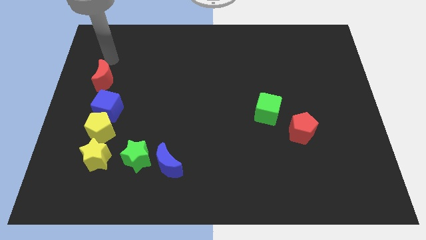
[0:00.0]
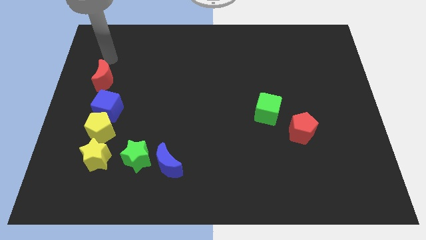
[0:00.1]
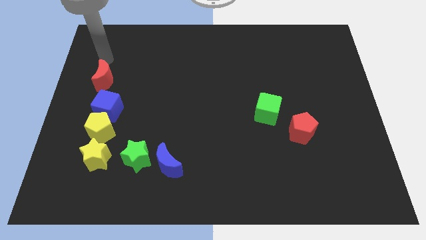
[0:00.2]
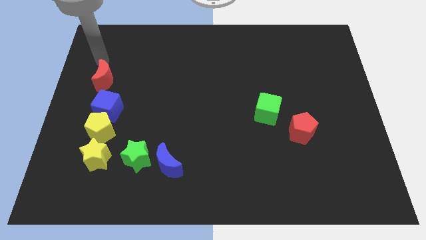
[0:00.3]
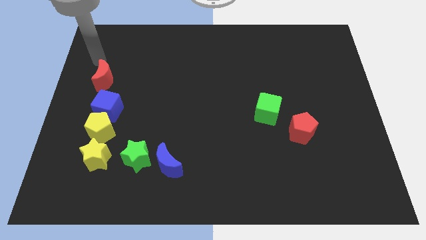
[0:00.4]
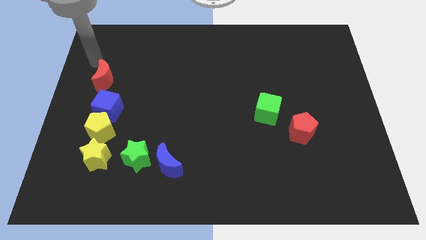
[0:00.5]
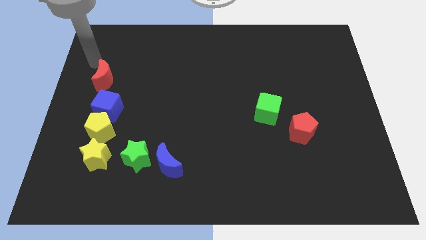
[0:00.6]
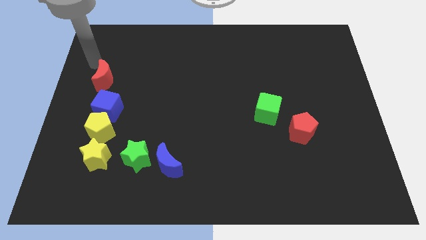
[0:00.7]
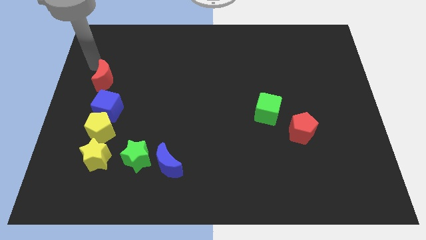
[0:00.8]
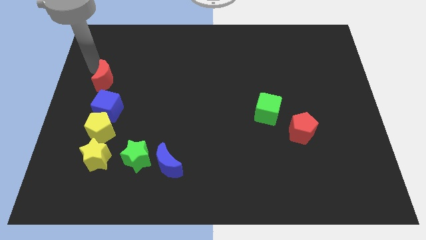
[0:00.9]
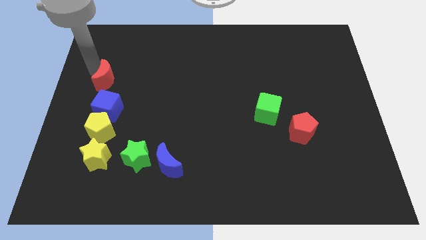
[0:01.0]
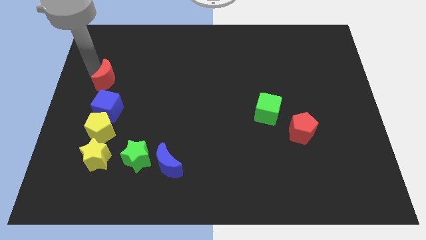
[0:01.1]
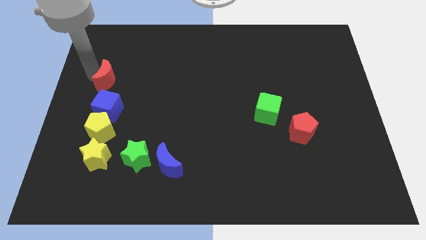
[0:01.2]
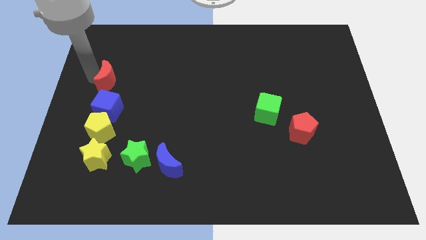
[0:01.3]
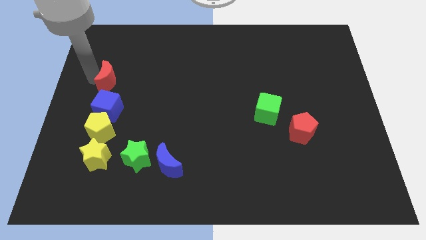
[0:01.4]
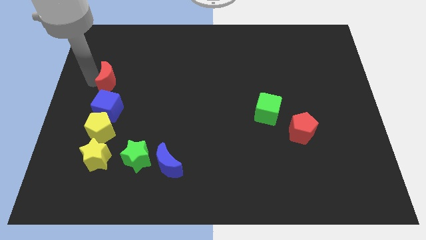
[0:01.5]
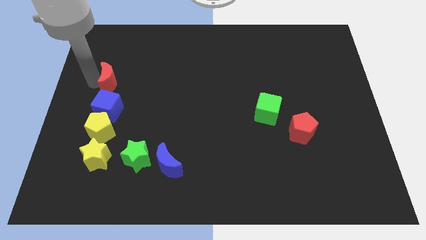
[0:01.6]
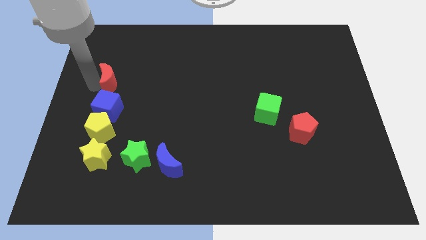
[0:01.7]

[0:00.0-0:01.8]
place red moon on the top of blue cube

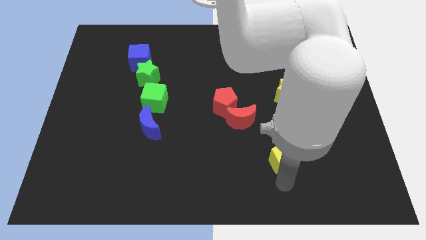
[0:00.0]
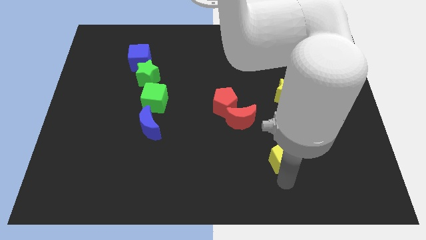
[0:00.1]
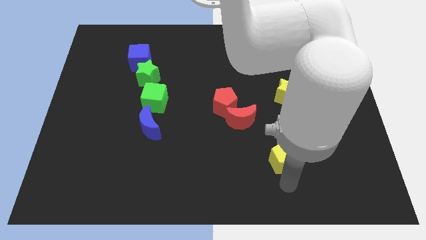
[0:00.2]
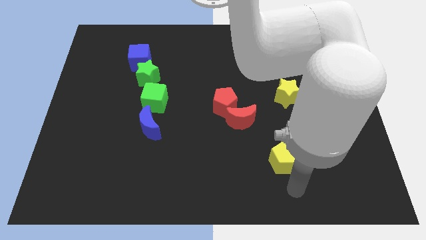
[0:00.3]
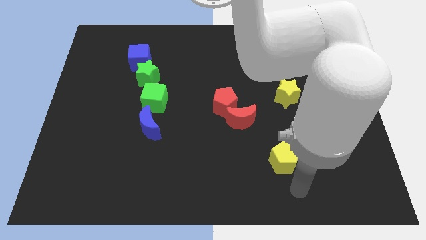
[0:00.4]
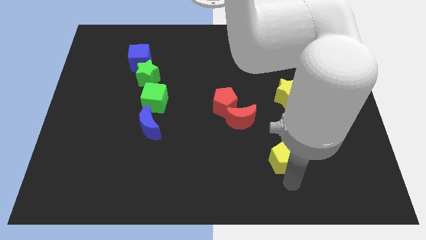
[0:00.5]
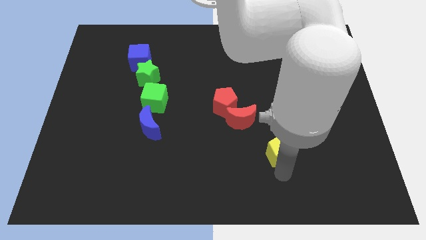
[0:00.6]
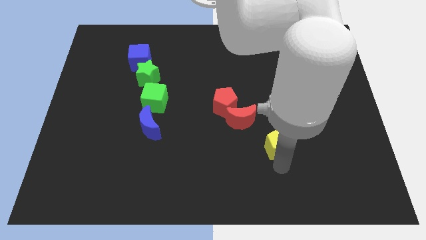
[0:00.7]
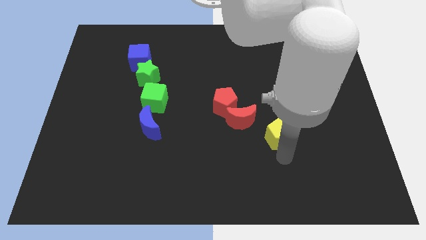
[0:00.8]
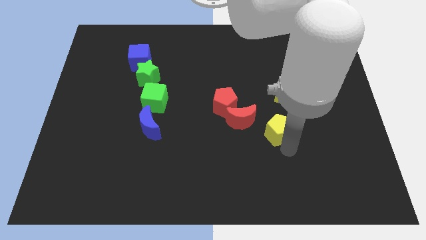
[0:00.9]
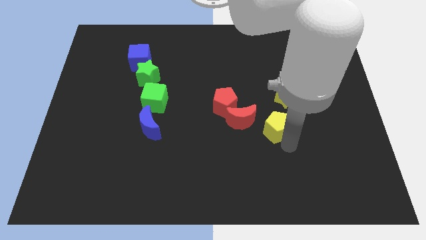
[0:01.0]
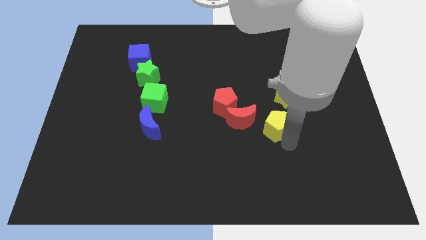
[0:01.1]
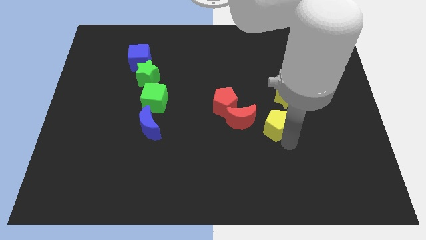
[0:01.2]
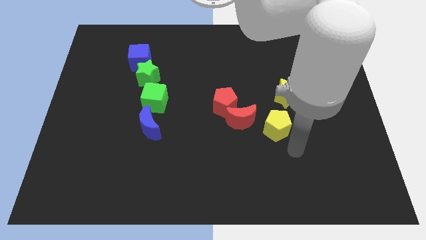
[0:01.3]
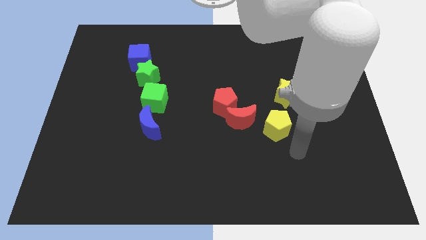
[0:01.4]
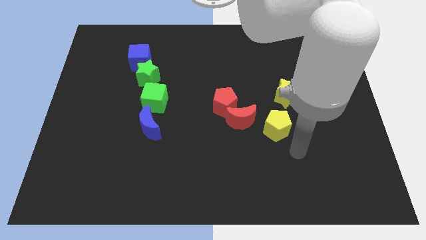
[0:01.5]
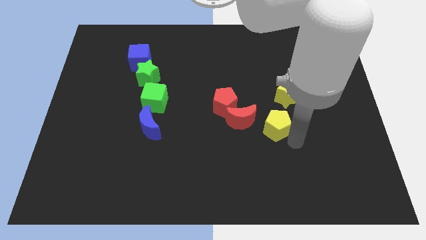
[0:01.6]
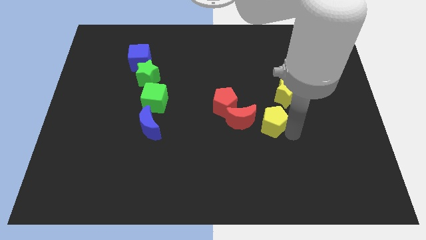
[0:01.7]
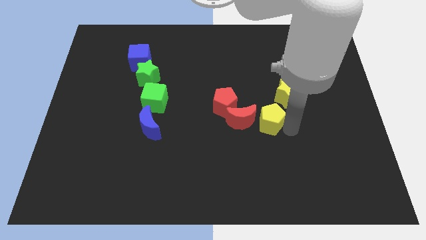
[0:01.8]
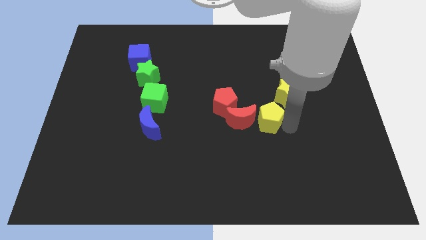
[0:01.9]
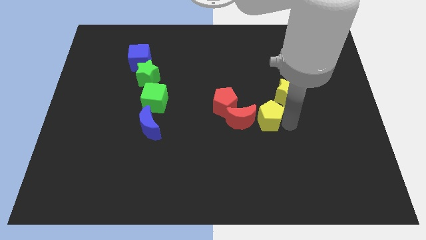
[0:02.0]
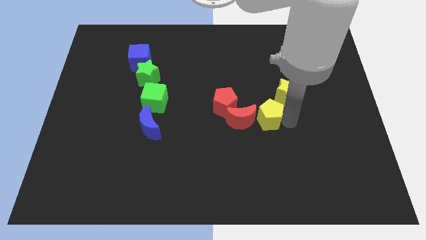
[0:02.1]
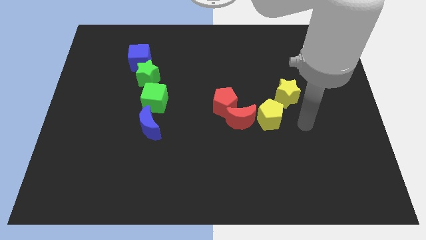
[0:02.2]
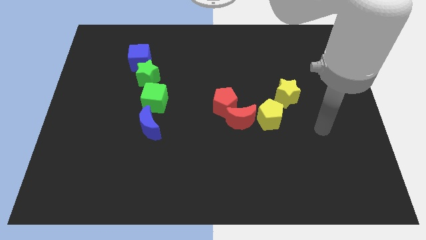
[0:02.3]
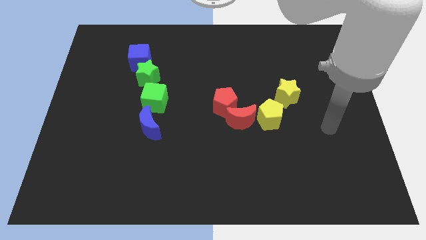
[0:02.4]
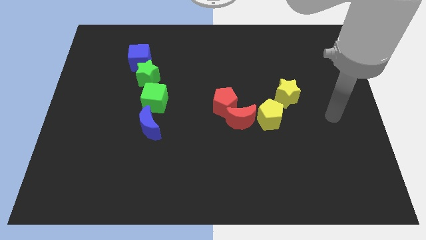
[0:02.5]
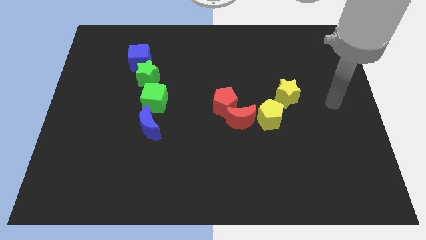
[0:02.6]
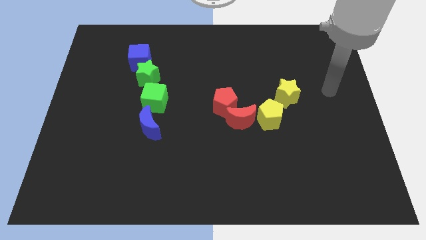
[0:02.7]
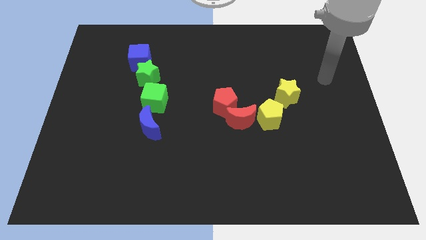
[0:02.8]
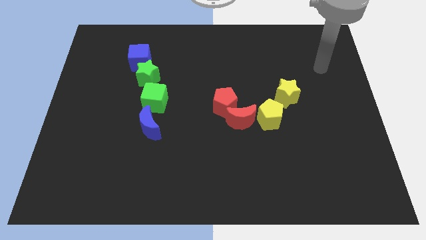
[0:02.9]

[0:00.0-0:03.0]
place yellow pentagon right to red moon

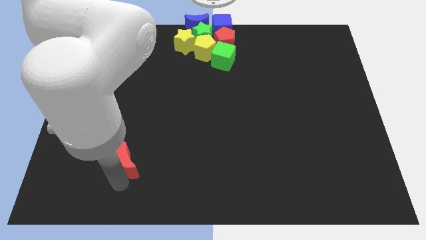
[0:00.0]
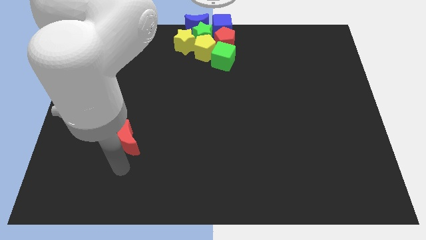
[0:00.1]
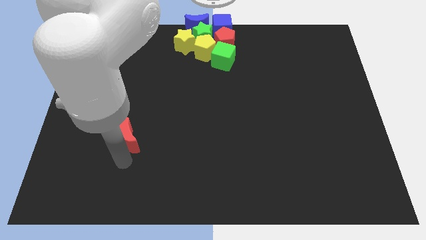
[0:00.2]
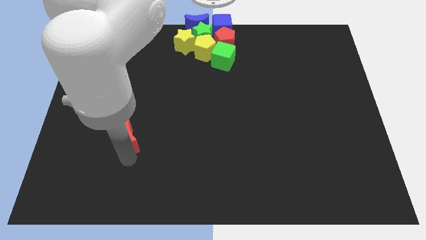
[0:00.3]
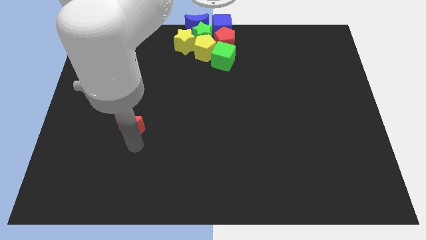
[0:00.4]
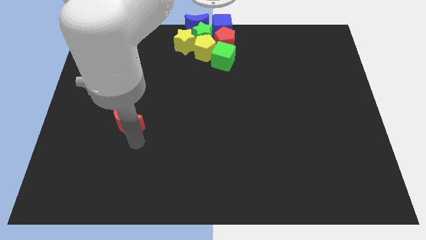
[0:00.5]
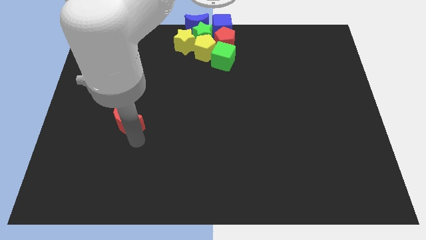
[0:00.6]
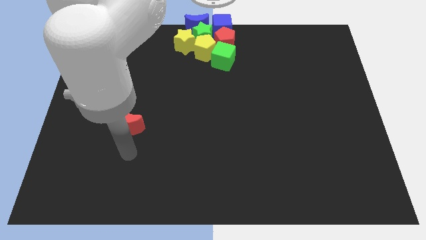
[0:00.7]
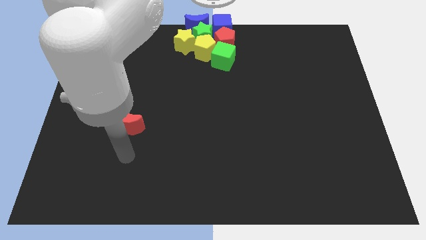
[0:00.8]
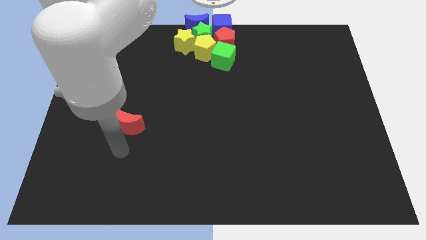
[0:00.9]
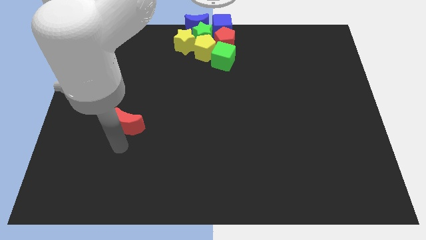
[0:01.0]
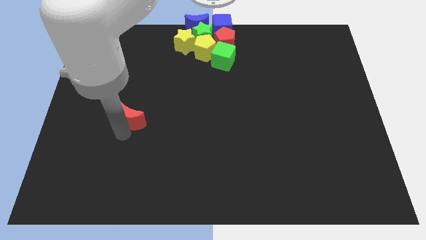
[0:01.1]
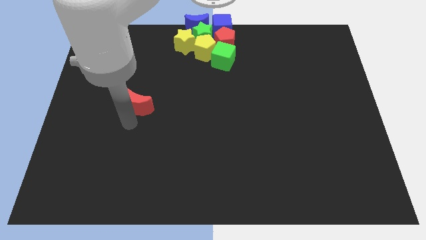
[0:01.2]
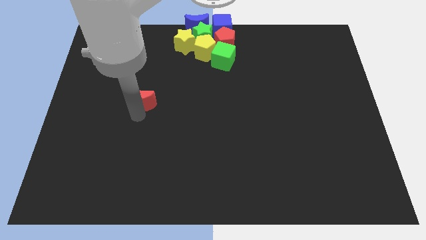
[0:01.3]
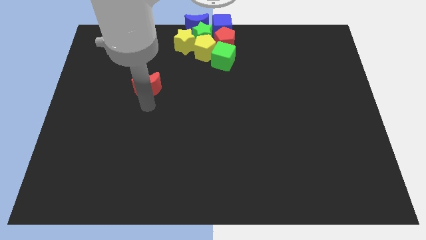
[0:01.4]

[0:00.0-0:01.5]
move the red moon towards the top side

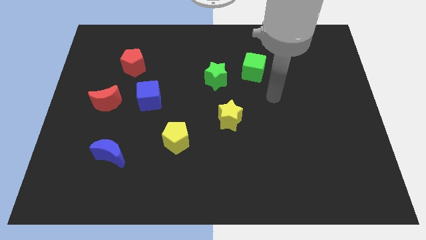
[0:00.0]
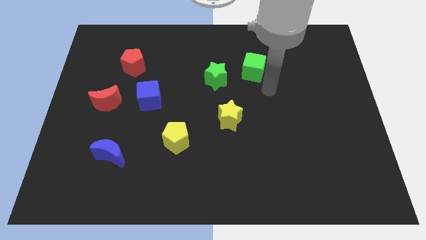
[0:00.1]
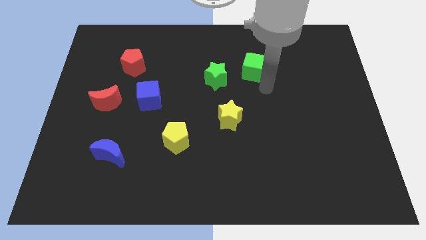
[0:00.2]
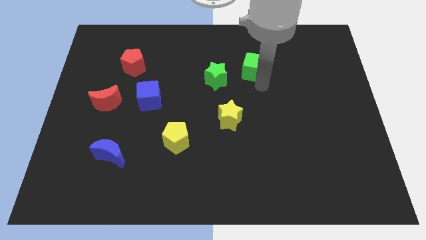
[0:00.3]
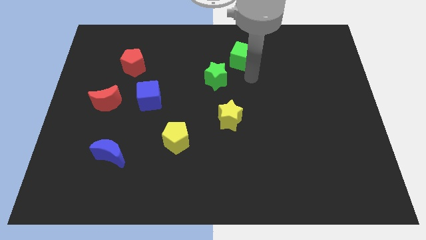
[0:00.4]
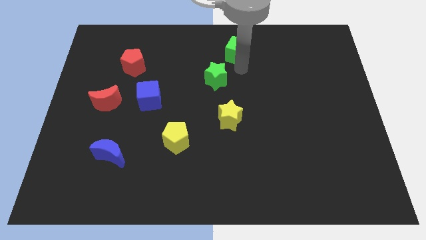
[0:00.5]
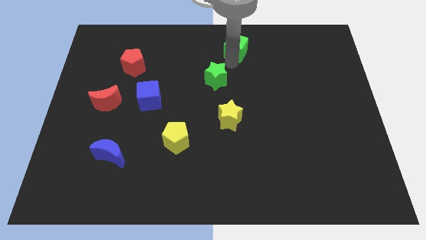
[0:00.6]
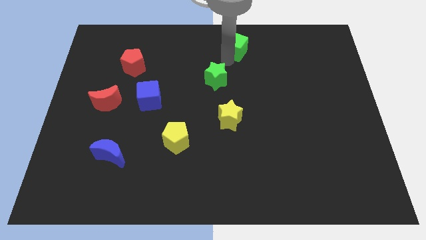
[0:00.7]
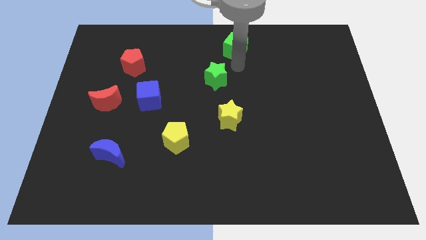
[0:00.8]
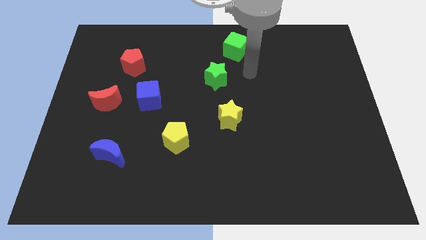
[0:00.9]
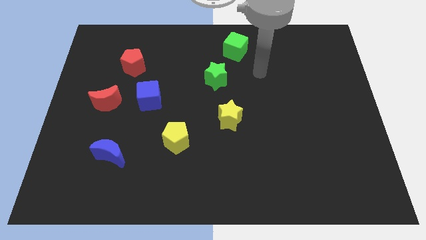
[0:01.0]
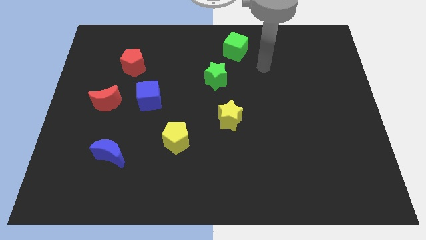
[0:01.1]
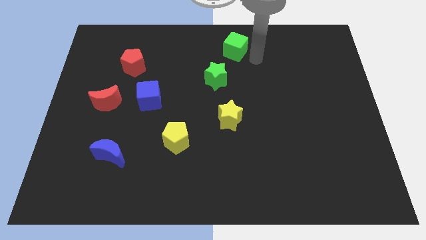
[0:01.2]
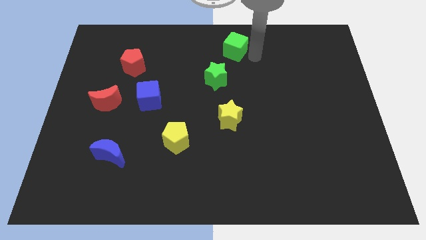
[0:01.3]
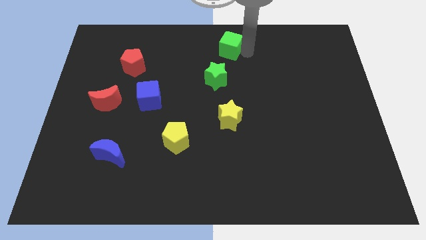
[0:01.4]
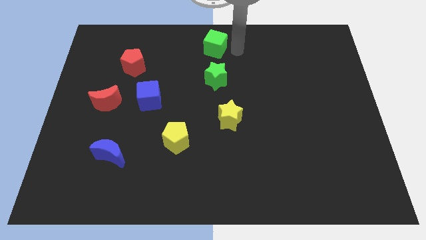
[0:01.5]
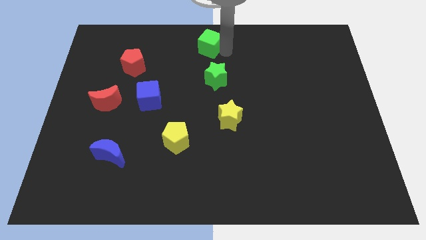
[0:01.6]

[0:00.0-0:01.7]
move the green cube to the top of the green star

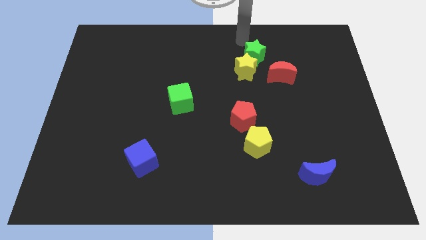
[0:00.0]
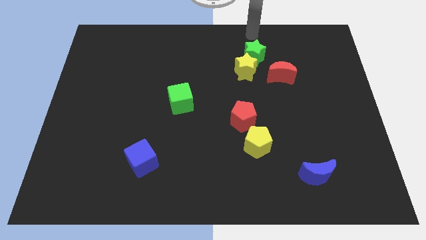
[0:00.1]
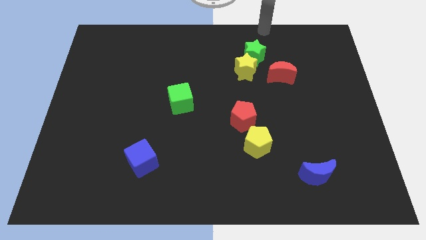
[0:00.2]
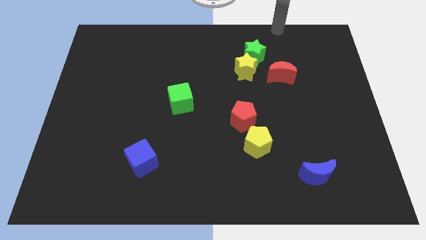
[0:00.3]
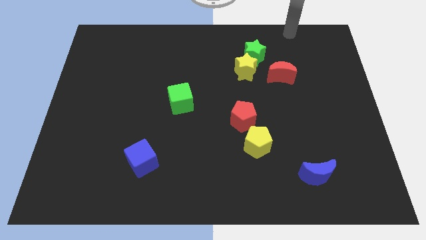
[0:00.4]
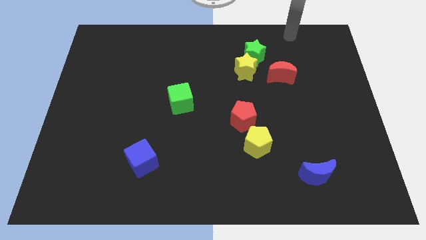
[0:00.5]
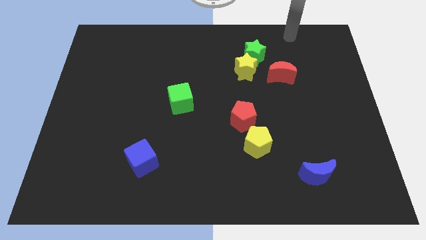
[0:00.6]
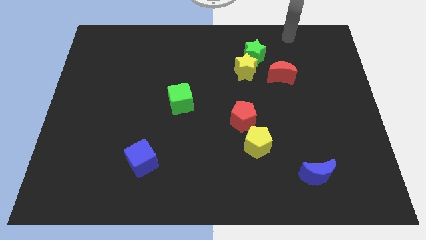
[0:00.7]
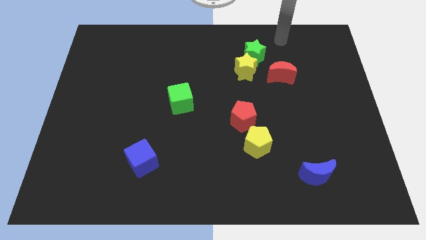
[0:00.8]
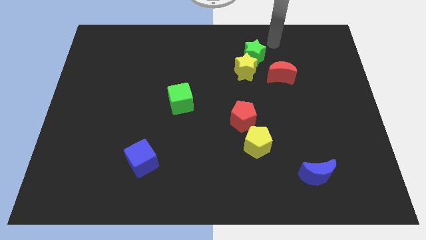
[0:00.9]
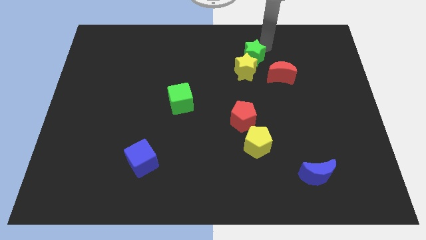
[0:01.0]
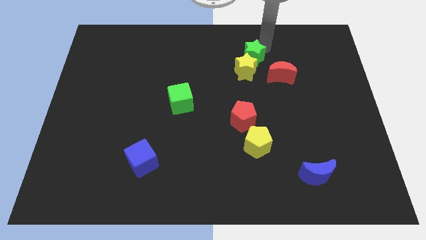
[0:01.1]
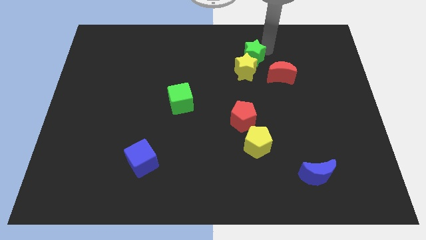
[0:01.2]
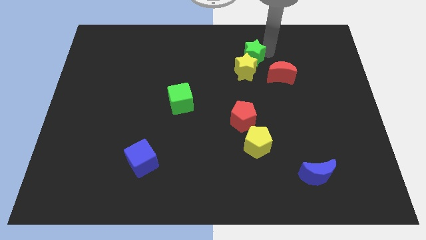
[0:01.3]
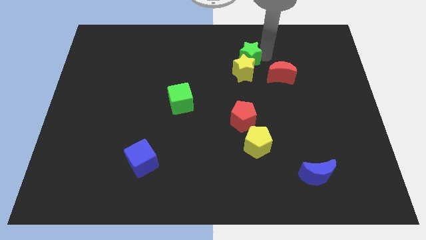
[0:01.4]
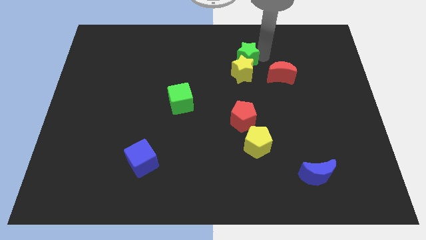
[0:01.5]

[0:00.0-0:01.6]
move your hand to the right of green star
